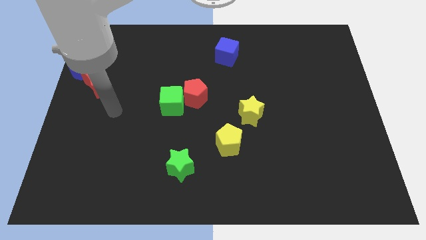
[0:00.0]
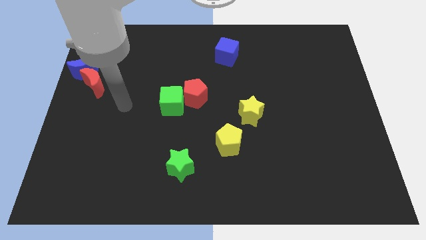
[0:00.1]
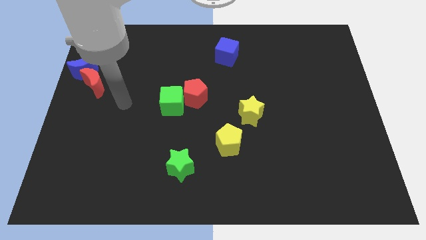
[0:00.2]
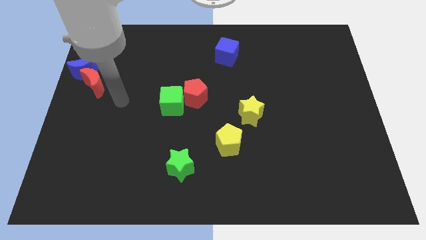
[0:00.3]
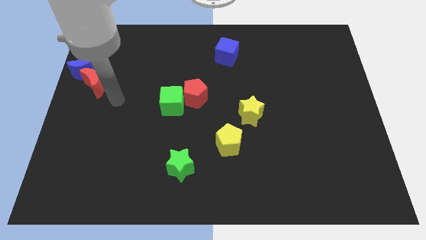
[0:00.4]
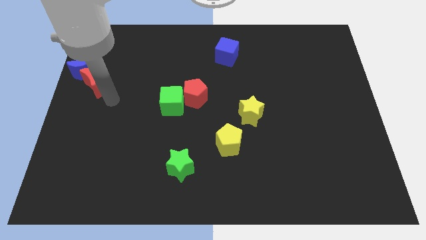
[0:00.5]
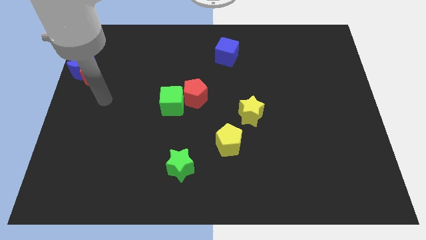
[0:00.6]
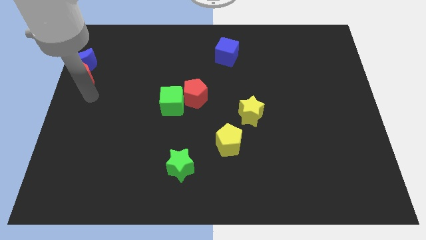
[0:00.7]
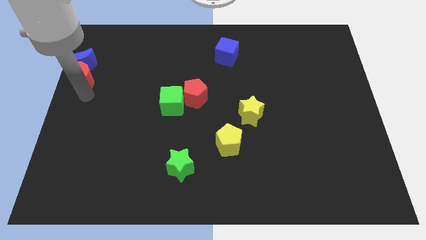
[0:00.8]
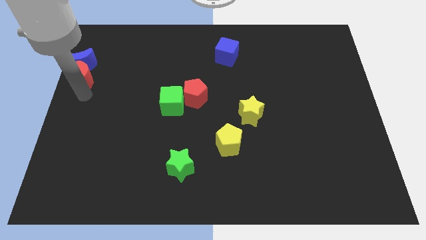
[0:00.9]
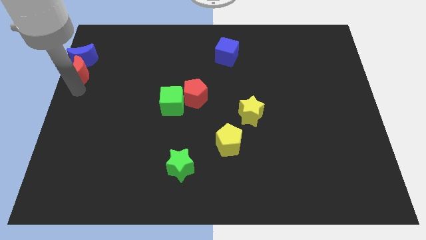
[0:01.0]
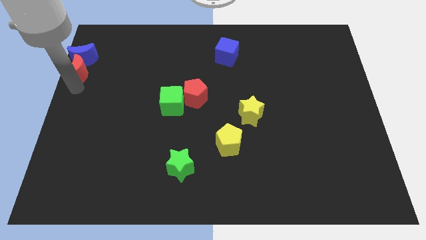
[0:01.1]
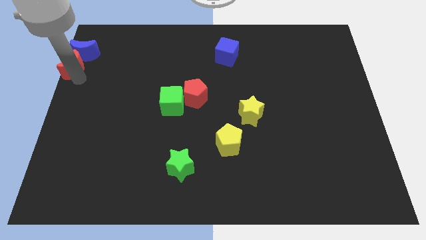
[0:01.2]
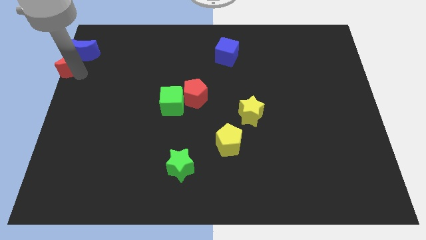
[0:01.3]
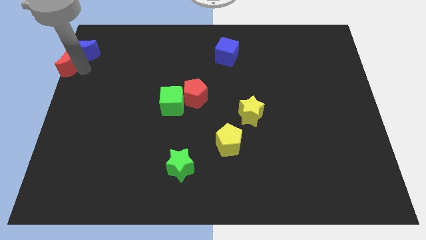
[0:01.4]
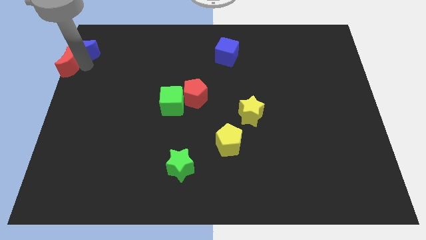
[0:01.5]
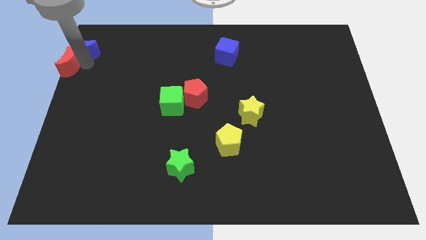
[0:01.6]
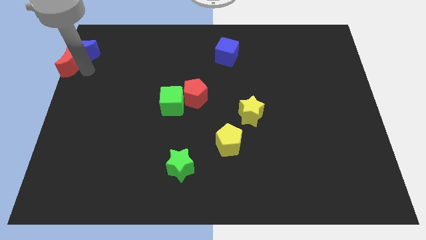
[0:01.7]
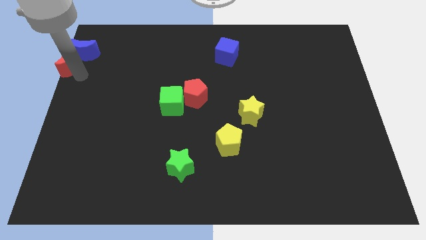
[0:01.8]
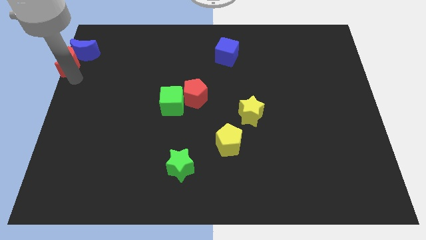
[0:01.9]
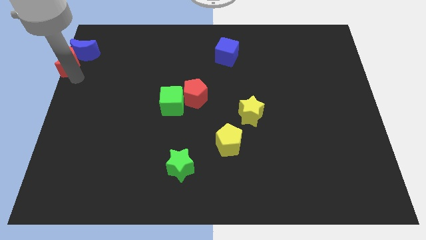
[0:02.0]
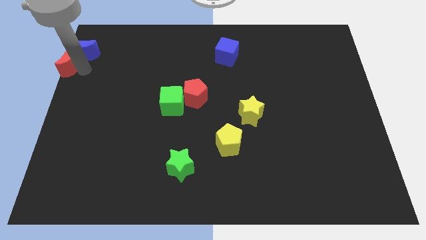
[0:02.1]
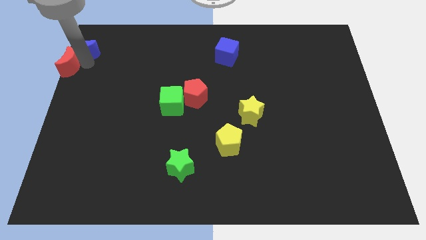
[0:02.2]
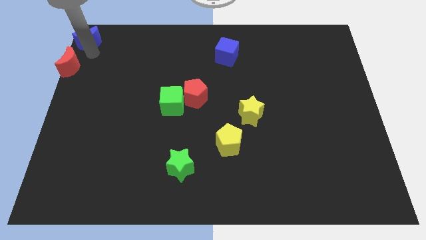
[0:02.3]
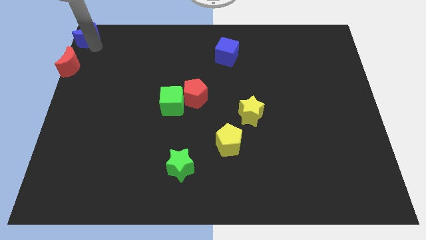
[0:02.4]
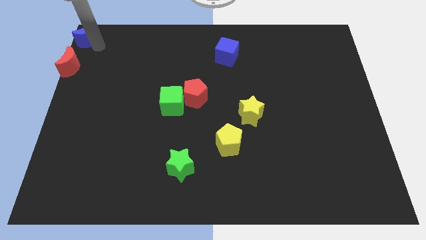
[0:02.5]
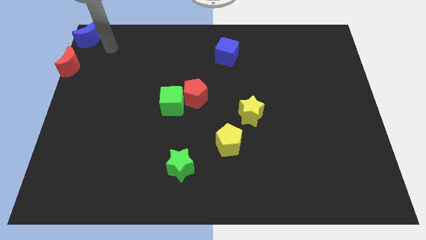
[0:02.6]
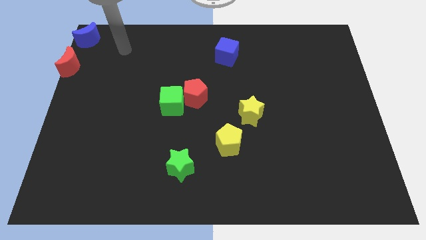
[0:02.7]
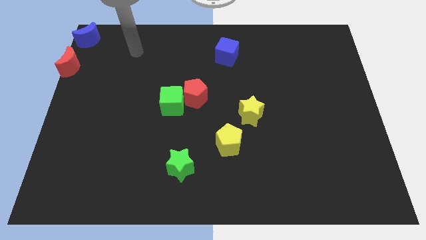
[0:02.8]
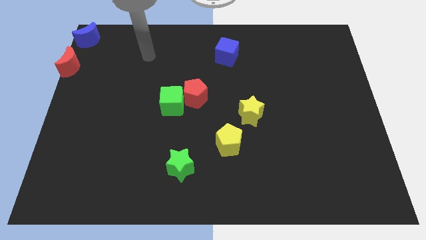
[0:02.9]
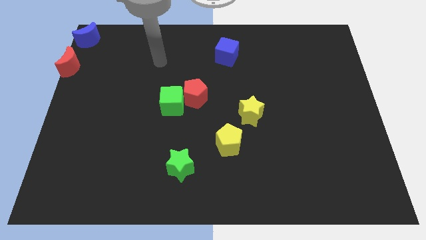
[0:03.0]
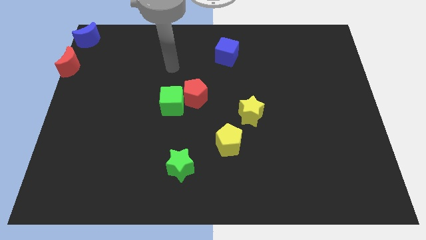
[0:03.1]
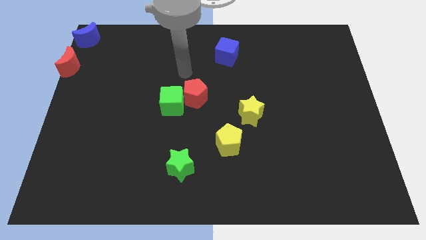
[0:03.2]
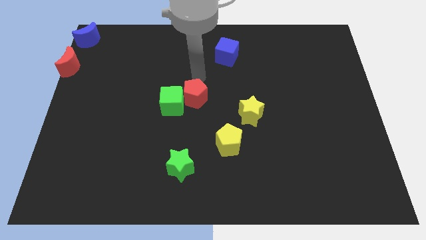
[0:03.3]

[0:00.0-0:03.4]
move the red moon and the blue crescent towards the top left

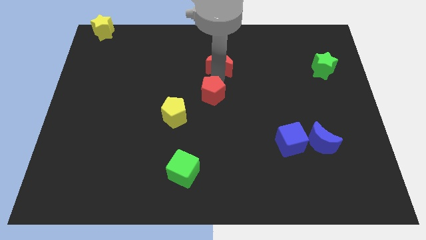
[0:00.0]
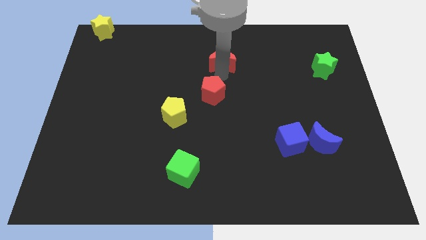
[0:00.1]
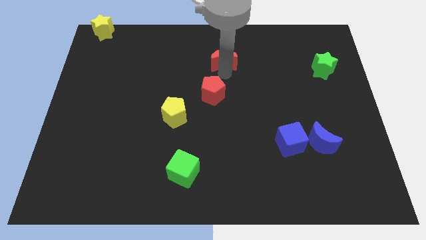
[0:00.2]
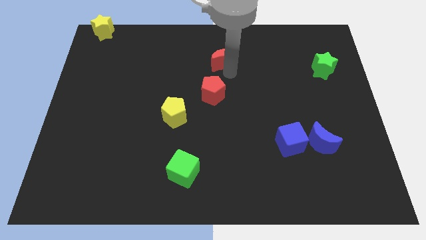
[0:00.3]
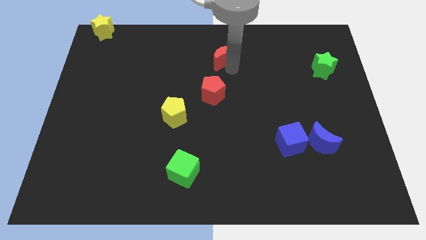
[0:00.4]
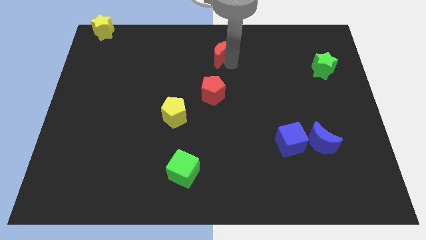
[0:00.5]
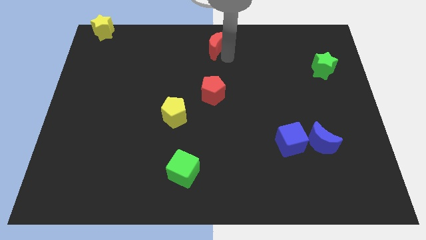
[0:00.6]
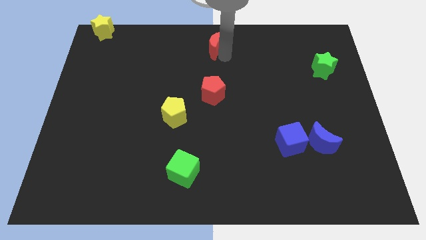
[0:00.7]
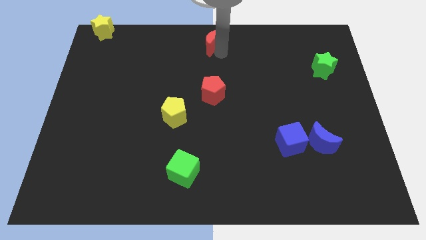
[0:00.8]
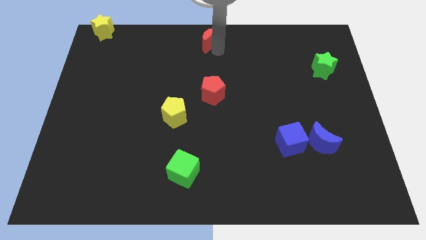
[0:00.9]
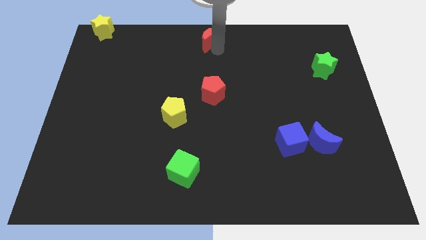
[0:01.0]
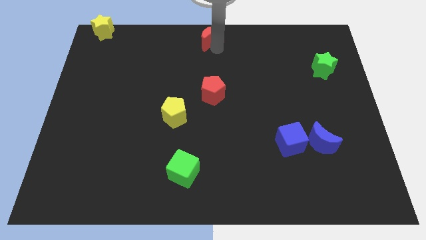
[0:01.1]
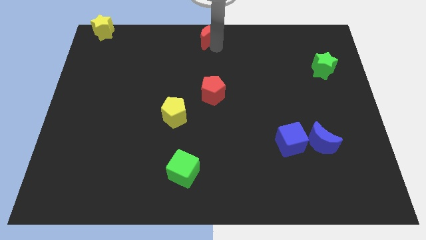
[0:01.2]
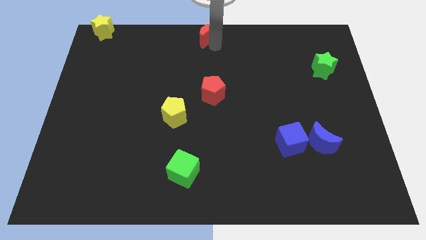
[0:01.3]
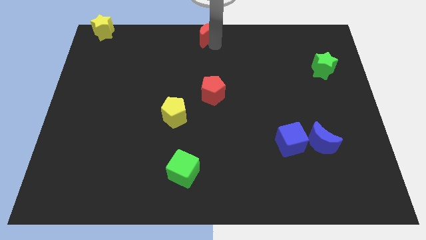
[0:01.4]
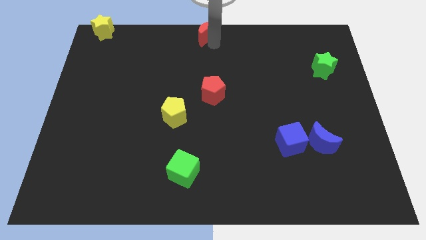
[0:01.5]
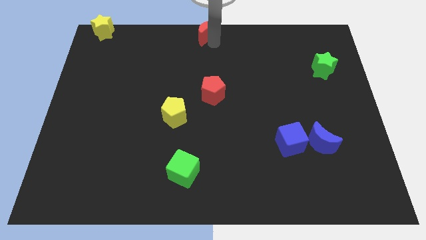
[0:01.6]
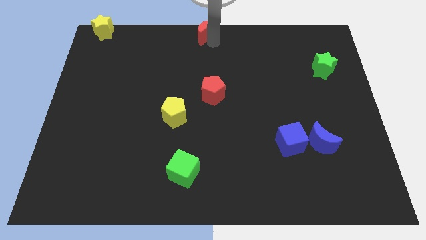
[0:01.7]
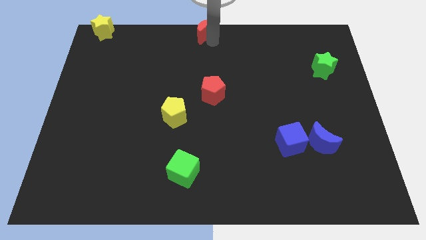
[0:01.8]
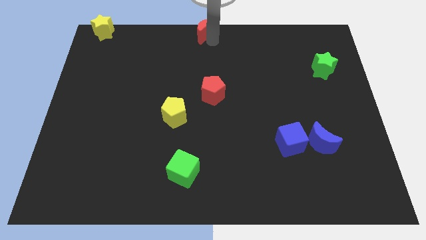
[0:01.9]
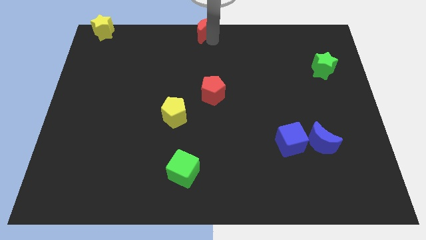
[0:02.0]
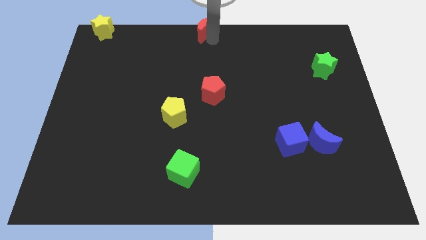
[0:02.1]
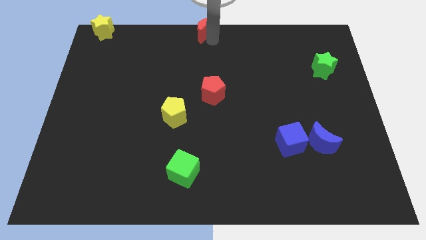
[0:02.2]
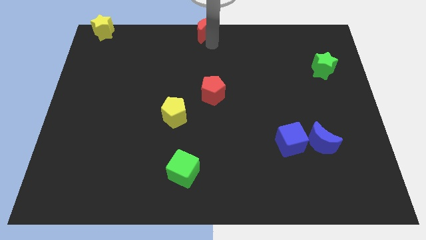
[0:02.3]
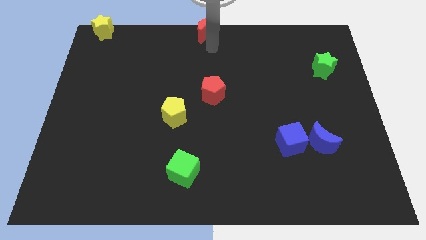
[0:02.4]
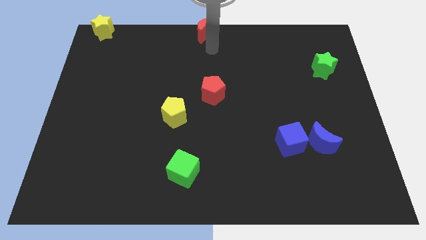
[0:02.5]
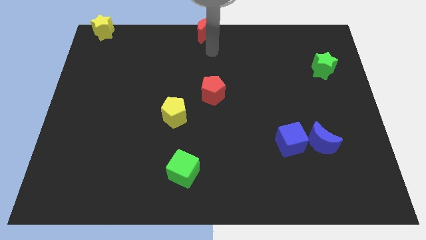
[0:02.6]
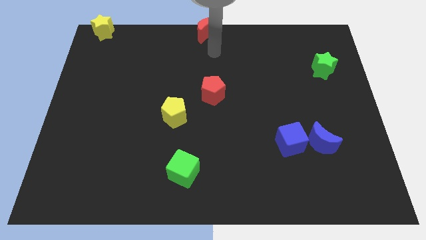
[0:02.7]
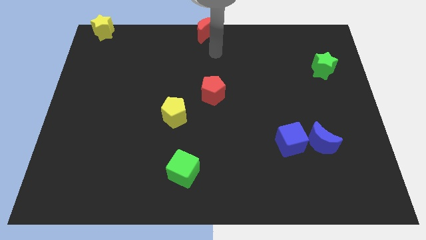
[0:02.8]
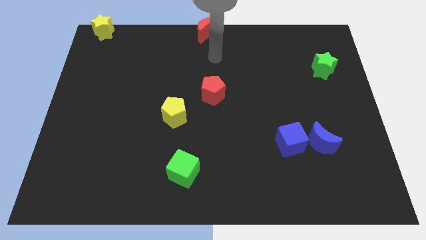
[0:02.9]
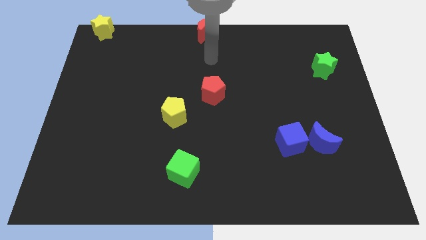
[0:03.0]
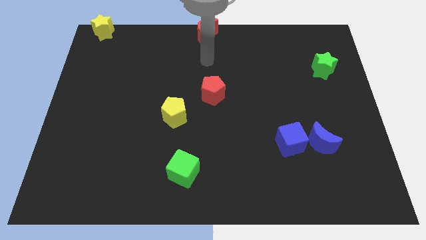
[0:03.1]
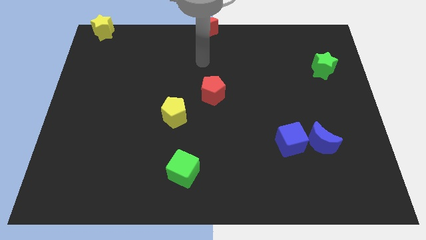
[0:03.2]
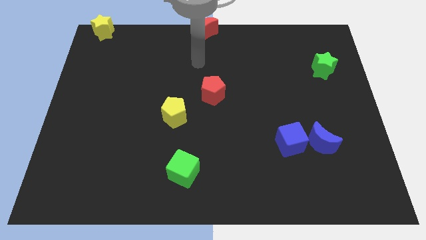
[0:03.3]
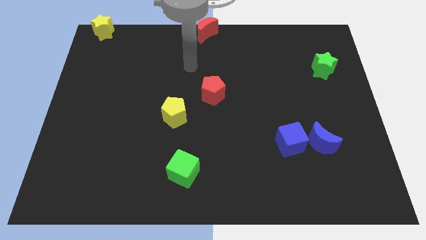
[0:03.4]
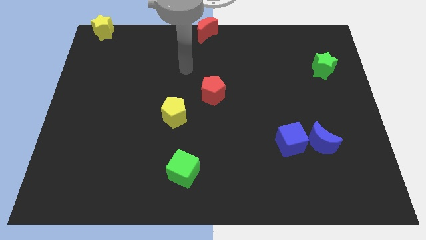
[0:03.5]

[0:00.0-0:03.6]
put the red crescent at the top center of the board

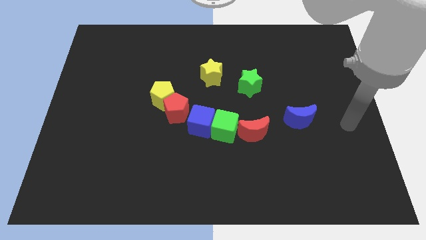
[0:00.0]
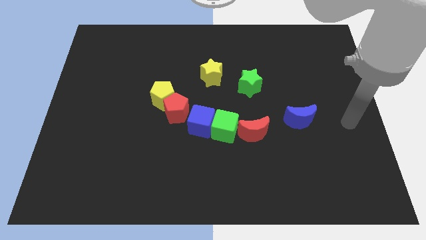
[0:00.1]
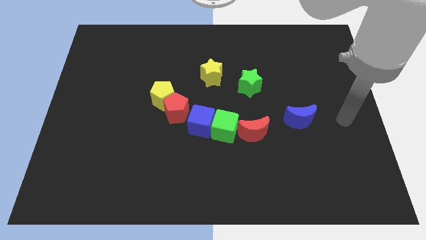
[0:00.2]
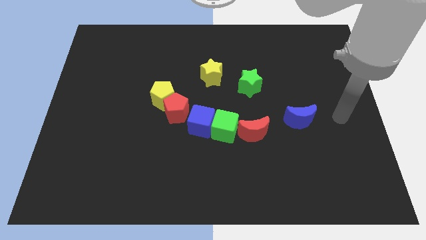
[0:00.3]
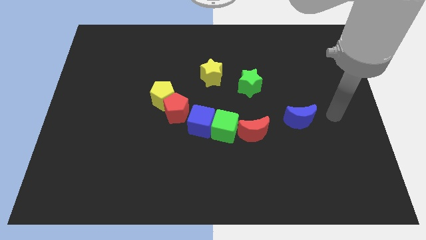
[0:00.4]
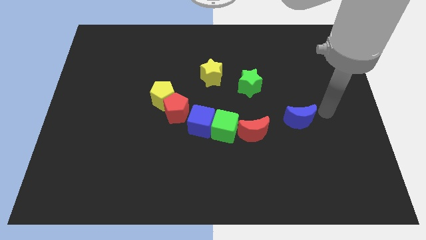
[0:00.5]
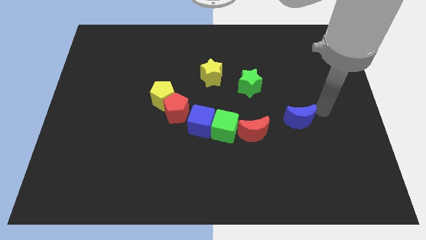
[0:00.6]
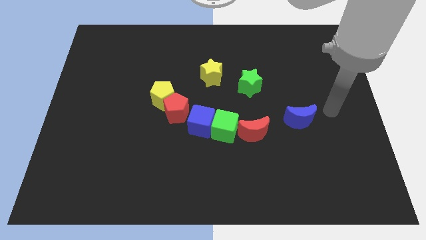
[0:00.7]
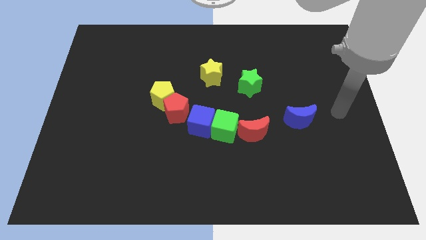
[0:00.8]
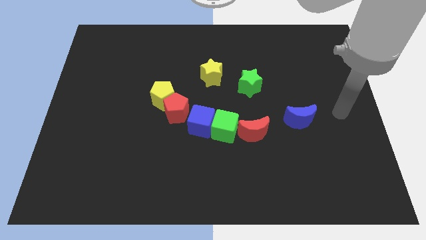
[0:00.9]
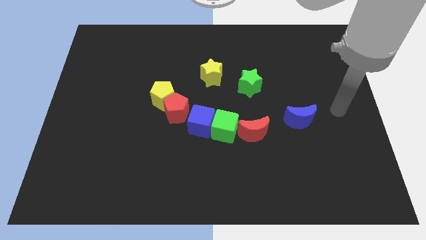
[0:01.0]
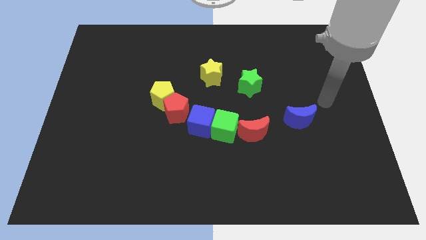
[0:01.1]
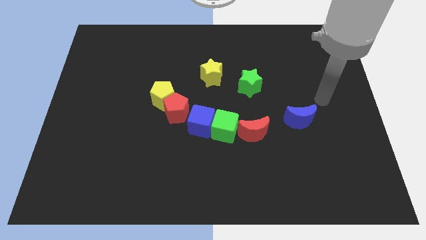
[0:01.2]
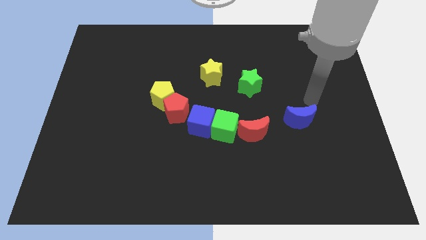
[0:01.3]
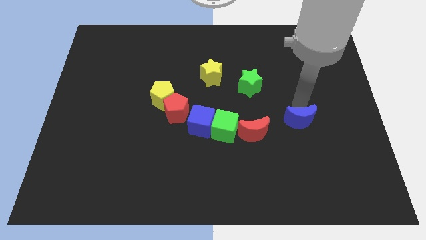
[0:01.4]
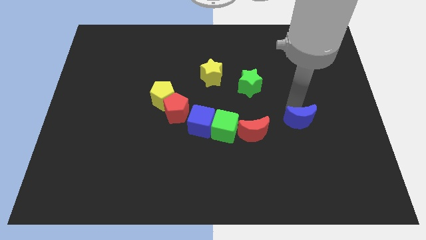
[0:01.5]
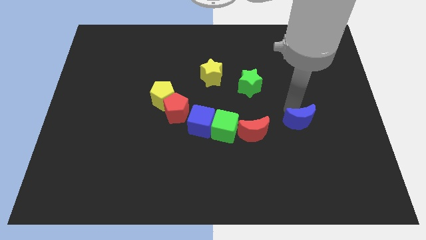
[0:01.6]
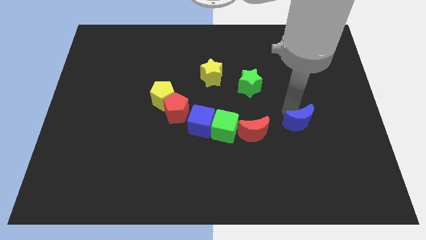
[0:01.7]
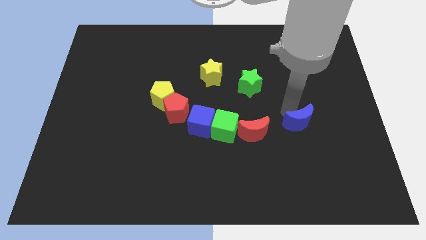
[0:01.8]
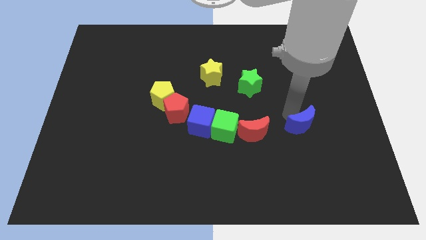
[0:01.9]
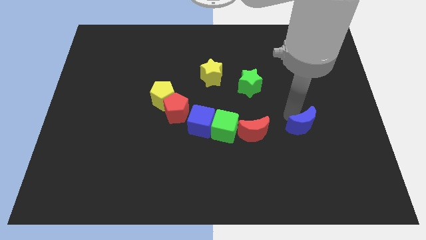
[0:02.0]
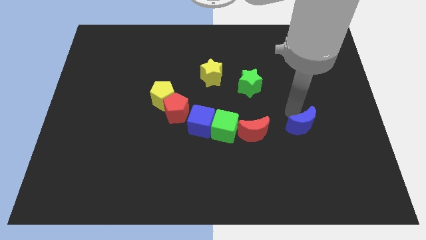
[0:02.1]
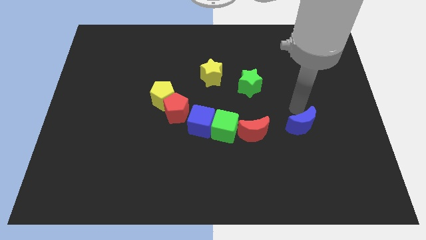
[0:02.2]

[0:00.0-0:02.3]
move blue crescent towards the red crescent
